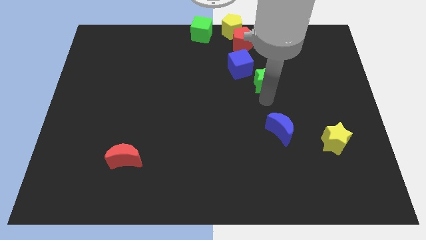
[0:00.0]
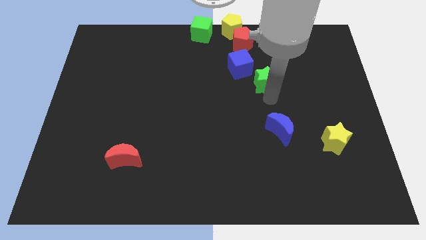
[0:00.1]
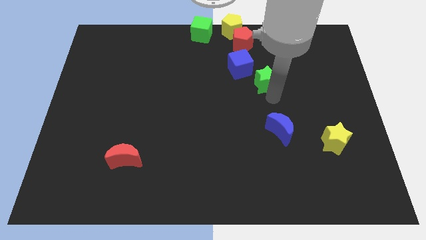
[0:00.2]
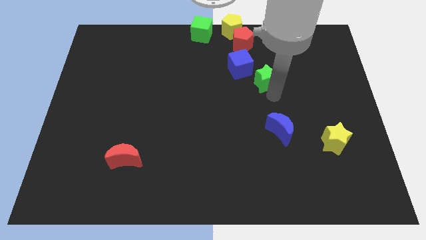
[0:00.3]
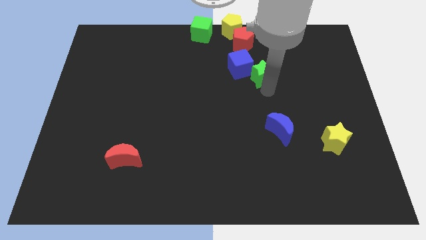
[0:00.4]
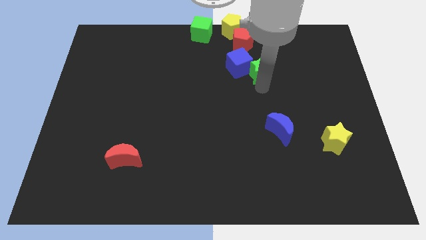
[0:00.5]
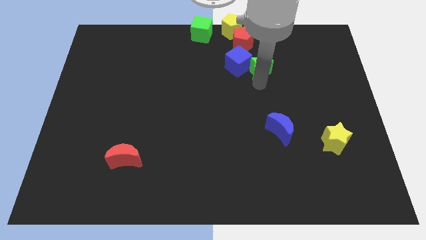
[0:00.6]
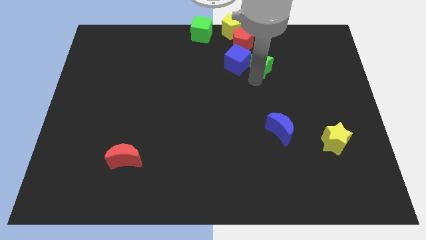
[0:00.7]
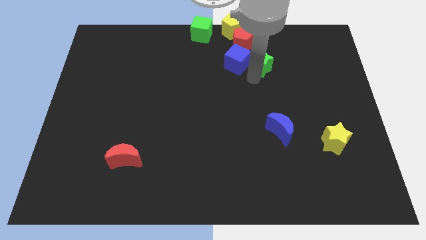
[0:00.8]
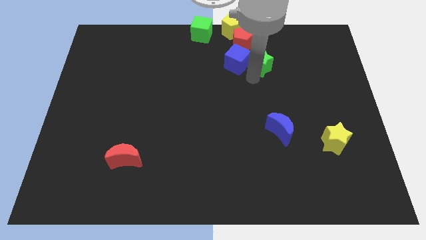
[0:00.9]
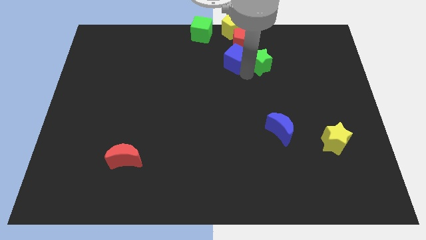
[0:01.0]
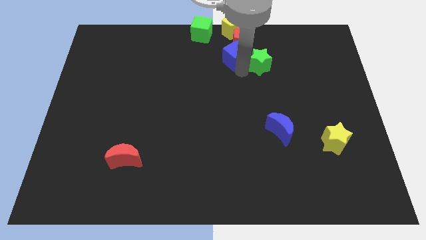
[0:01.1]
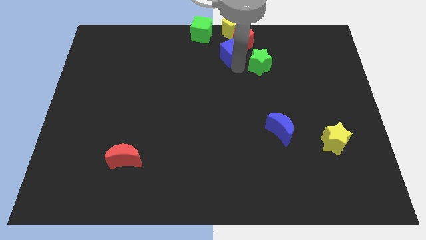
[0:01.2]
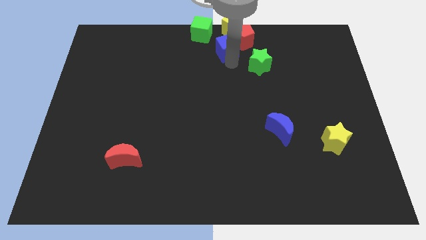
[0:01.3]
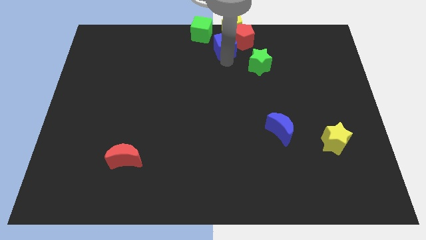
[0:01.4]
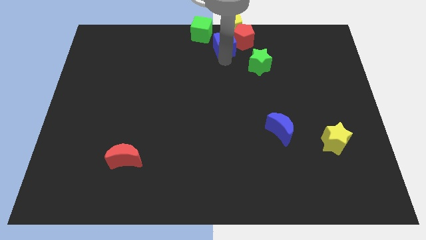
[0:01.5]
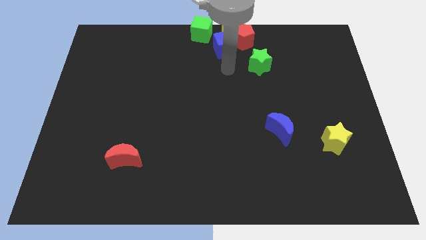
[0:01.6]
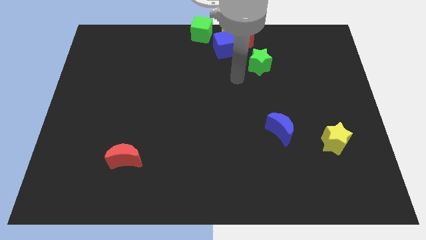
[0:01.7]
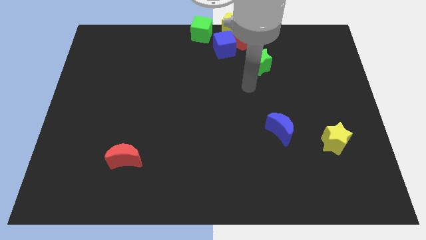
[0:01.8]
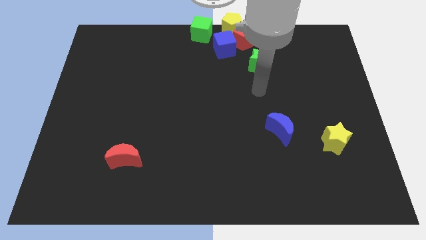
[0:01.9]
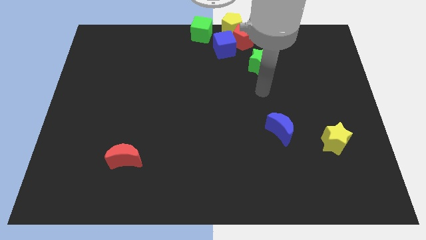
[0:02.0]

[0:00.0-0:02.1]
separate the blue cube into group of blocks at the top

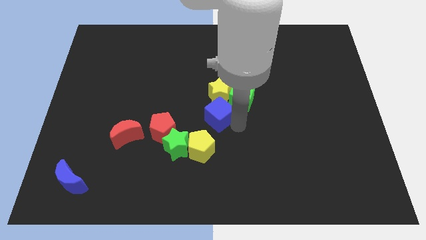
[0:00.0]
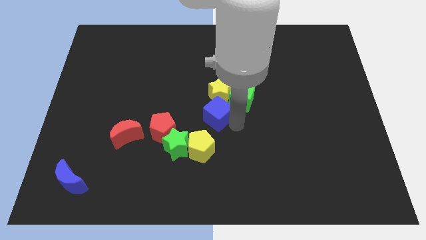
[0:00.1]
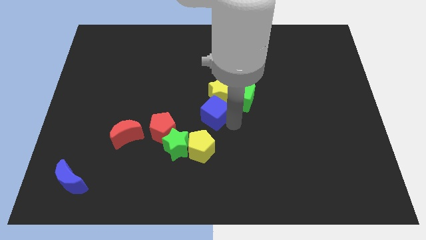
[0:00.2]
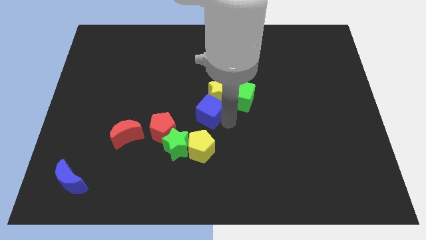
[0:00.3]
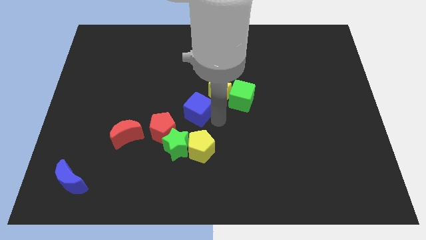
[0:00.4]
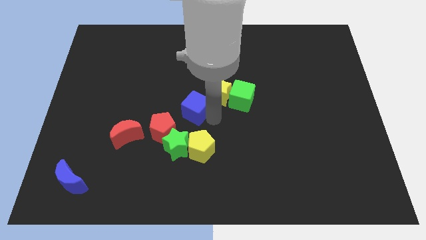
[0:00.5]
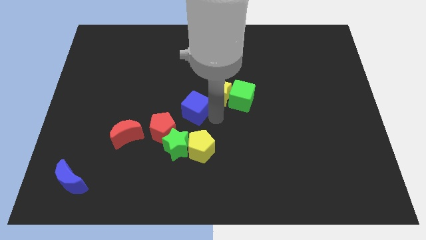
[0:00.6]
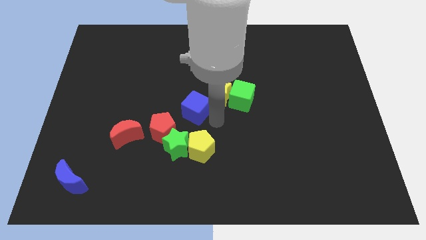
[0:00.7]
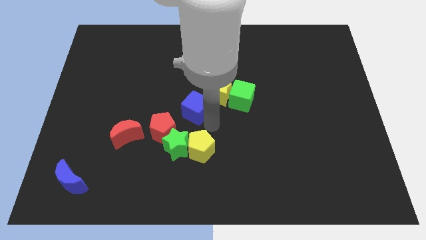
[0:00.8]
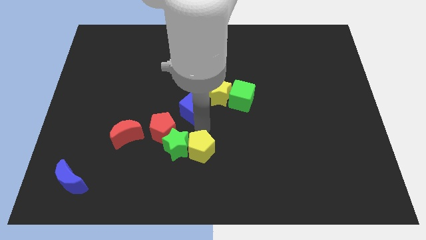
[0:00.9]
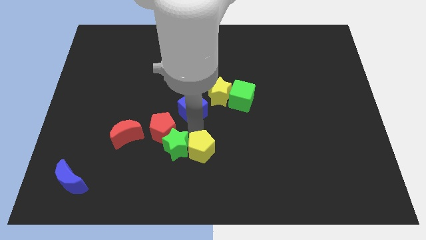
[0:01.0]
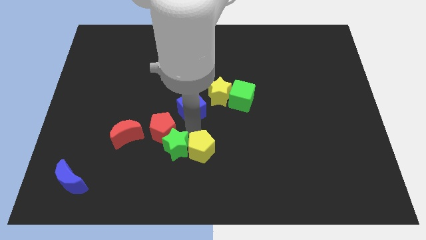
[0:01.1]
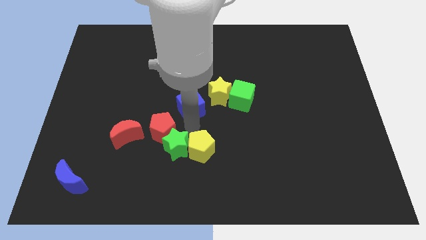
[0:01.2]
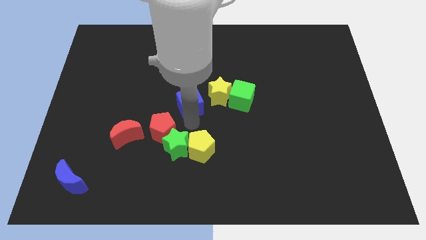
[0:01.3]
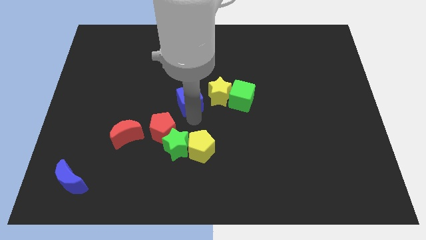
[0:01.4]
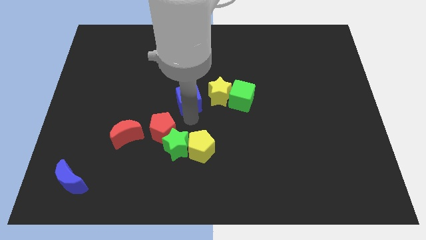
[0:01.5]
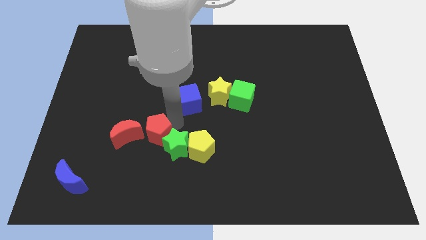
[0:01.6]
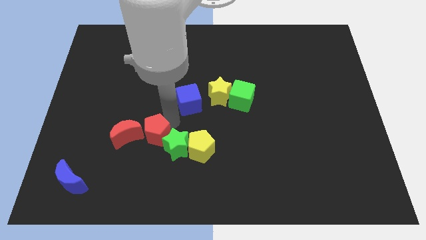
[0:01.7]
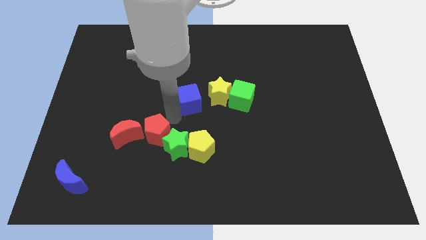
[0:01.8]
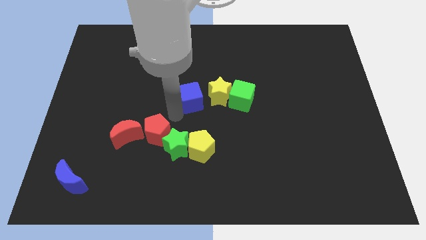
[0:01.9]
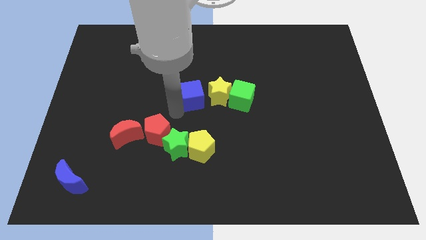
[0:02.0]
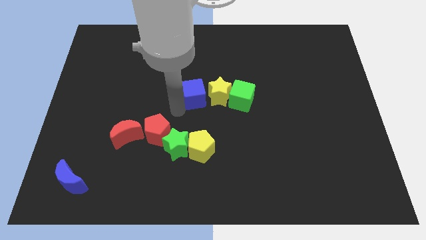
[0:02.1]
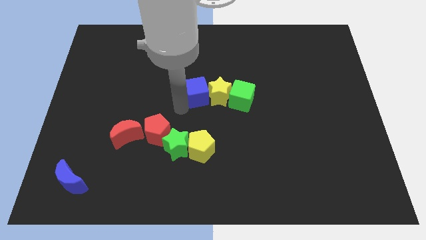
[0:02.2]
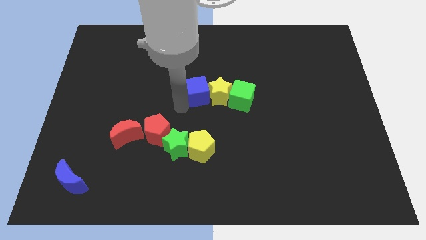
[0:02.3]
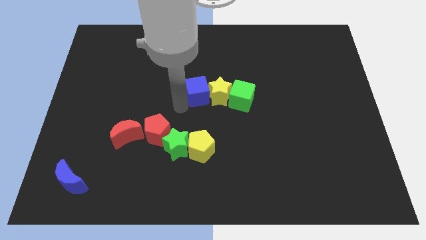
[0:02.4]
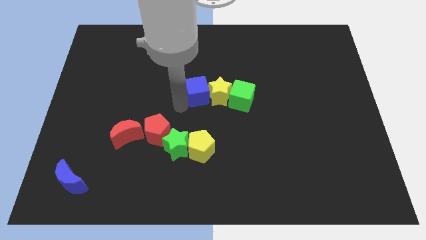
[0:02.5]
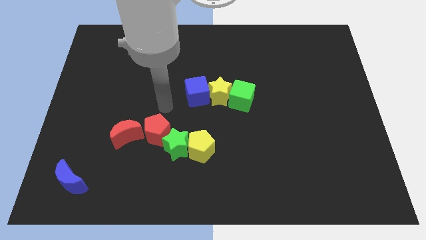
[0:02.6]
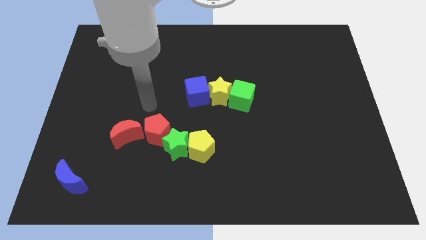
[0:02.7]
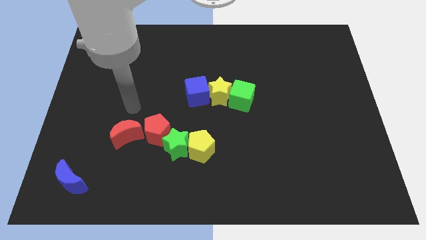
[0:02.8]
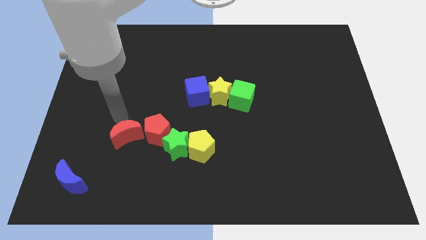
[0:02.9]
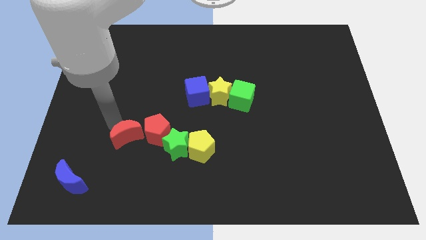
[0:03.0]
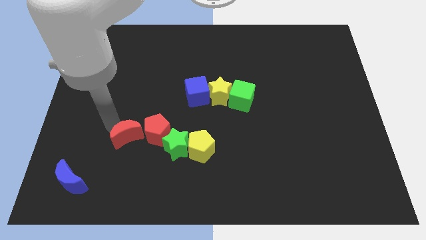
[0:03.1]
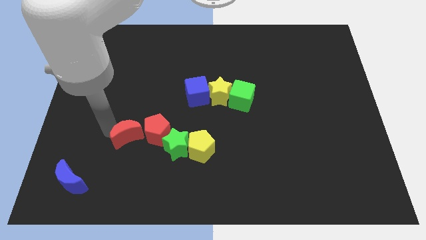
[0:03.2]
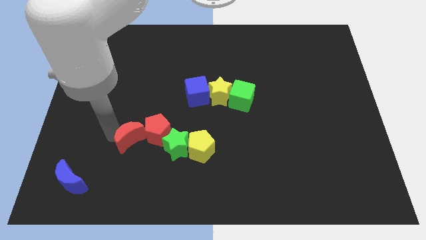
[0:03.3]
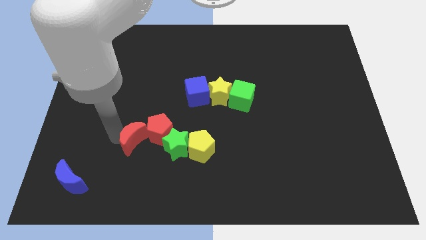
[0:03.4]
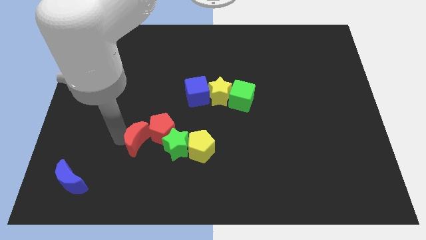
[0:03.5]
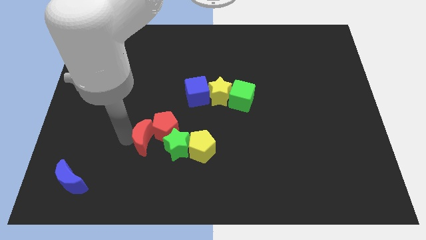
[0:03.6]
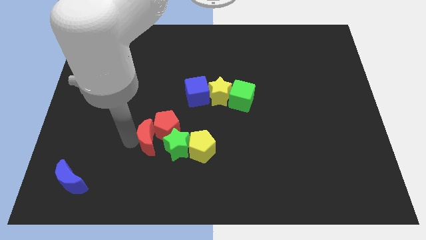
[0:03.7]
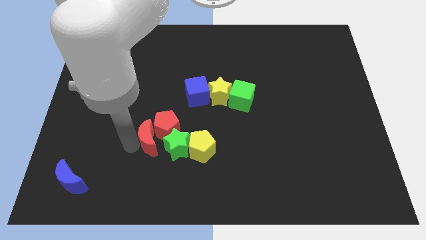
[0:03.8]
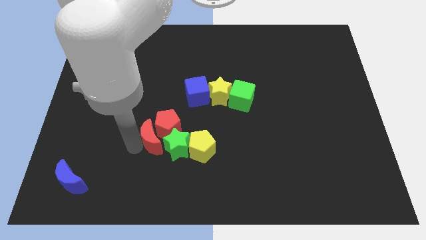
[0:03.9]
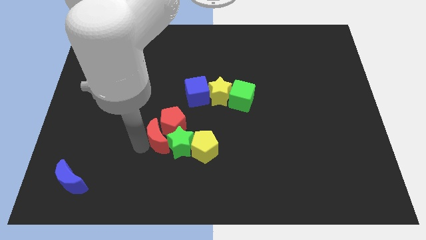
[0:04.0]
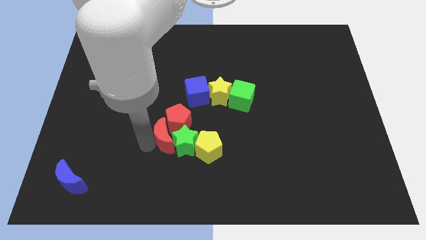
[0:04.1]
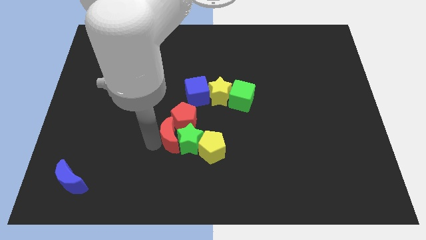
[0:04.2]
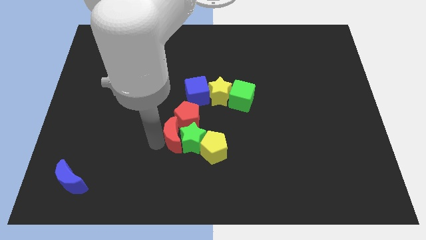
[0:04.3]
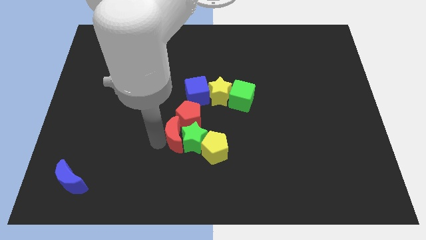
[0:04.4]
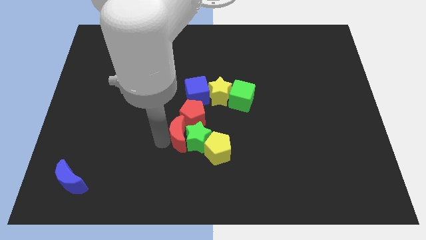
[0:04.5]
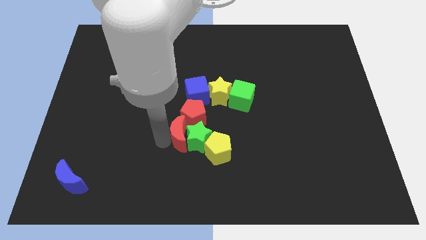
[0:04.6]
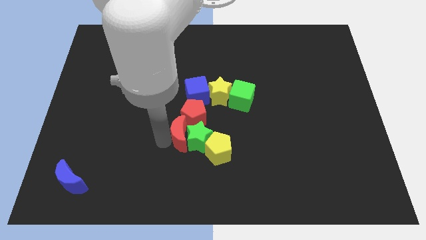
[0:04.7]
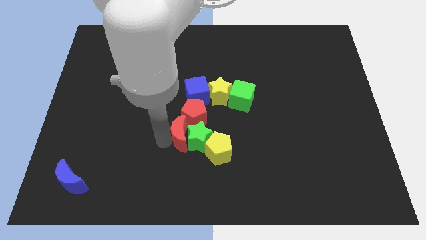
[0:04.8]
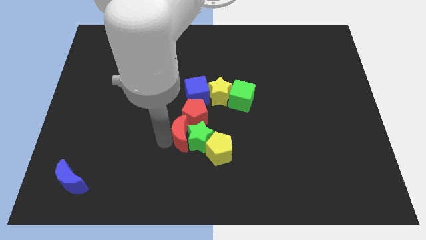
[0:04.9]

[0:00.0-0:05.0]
place the red moon diagonal to the red pentagon

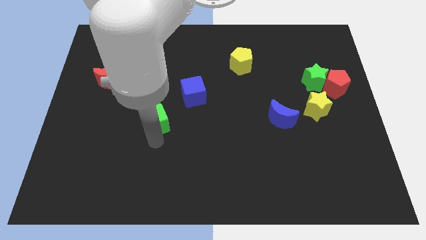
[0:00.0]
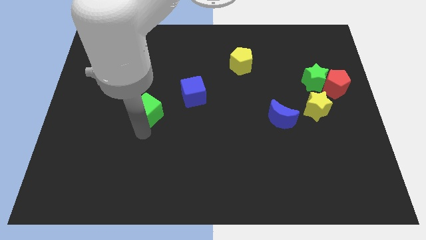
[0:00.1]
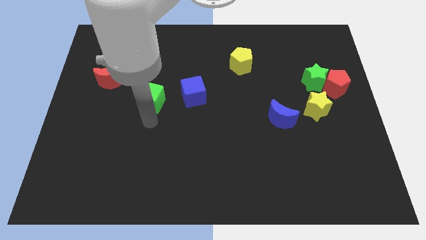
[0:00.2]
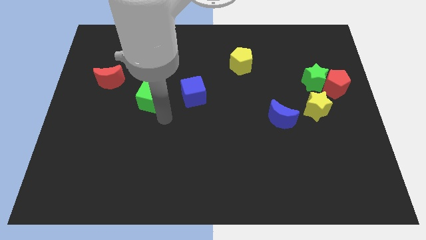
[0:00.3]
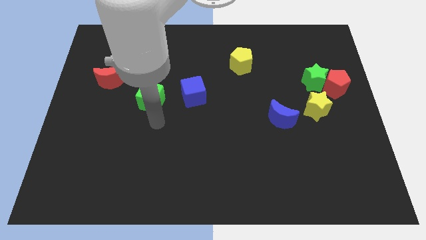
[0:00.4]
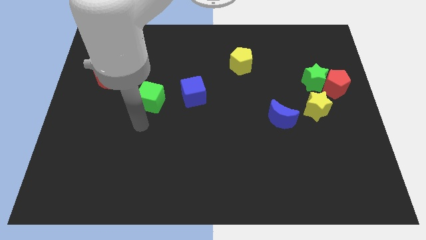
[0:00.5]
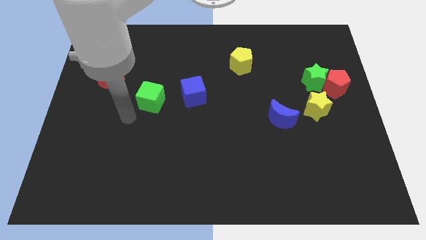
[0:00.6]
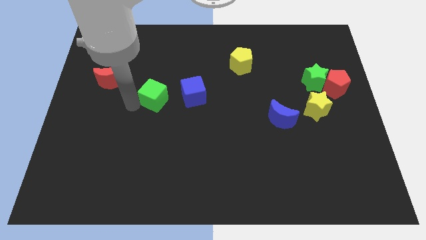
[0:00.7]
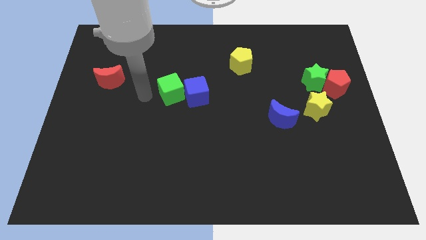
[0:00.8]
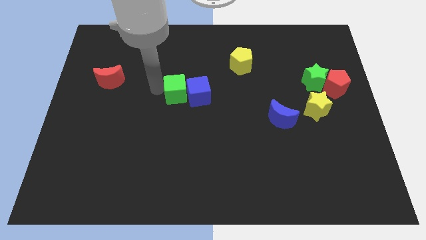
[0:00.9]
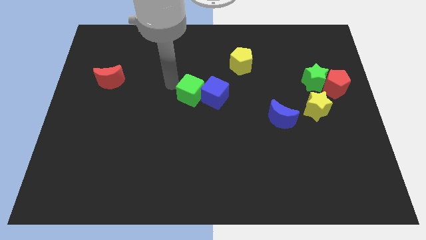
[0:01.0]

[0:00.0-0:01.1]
slide the green cube into the blue cube

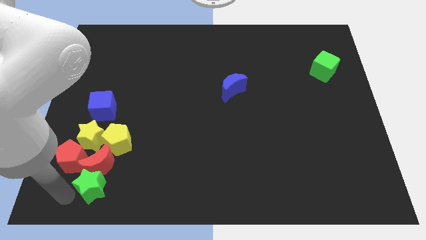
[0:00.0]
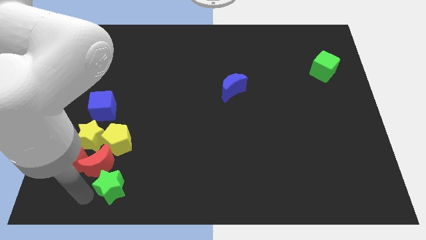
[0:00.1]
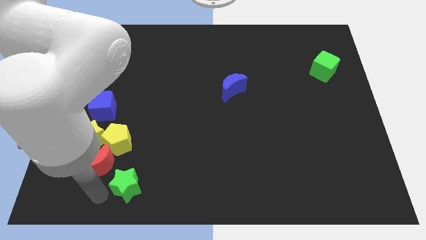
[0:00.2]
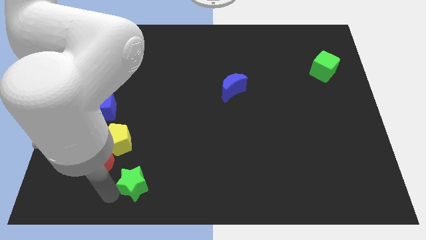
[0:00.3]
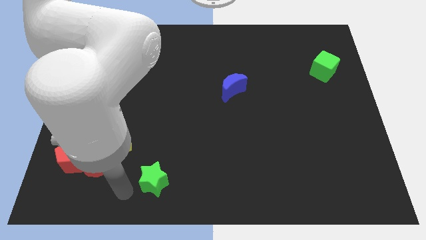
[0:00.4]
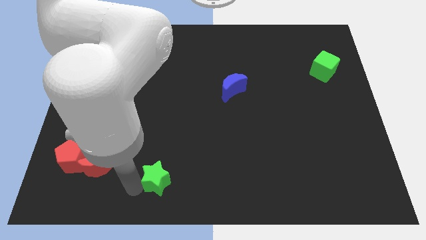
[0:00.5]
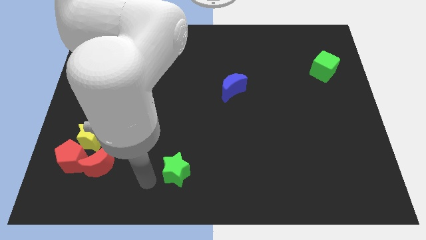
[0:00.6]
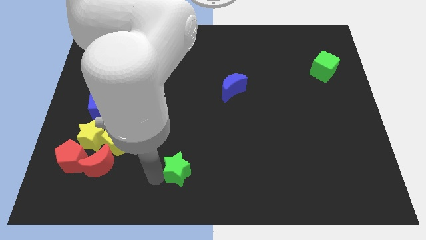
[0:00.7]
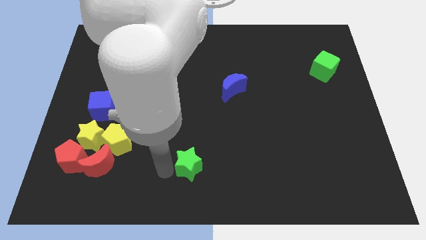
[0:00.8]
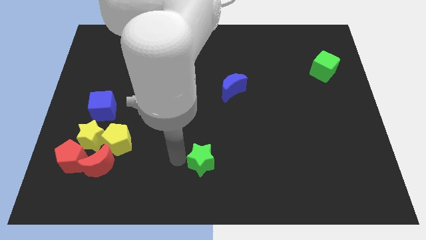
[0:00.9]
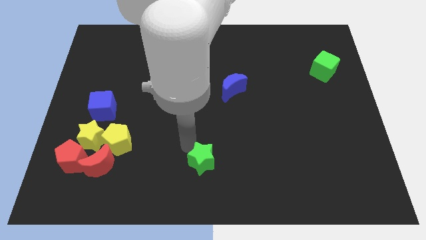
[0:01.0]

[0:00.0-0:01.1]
push the green star to the top of the board
